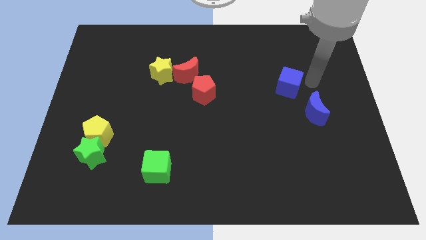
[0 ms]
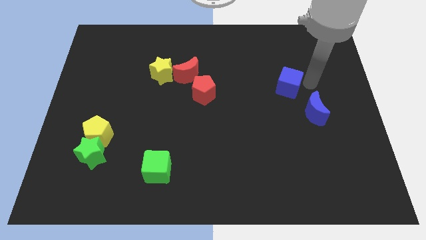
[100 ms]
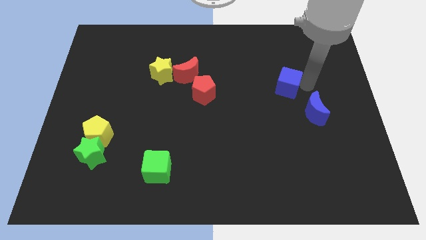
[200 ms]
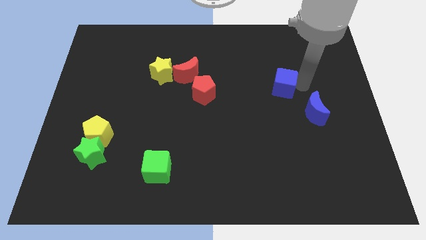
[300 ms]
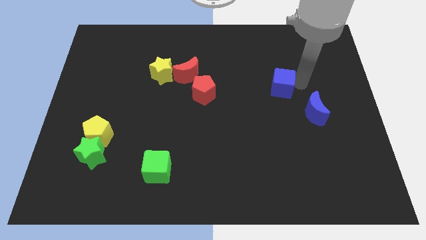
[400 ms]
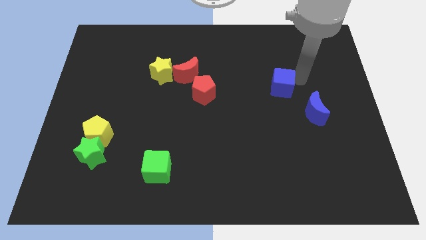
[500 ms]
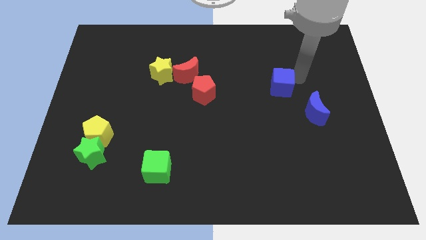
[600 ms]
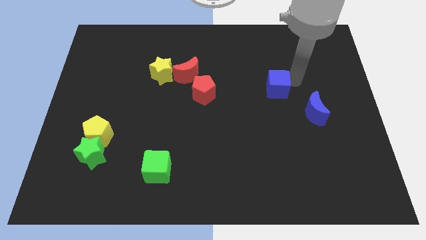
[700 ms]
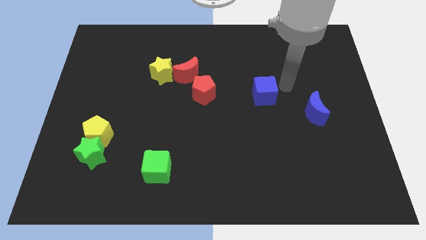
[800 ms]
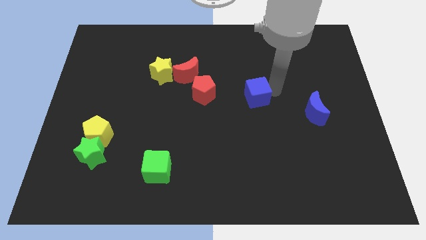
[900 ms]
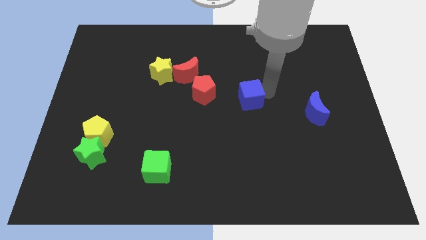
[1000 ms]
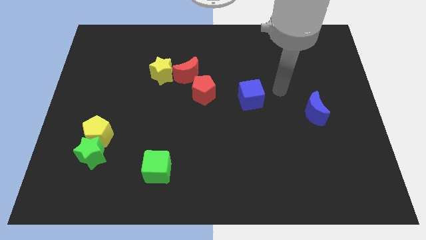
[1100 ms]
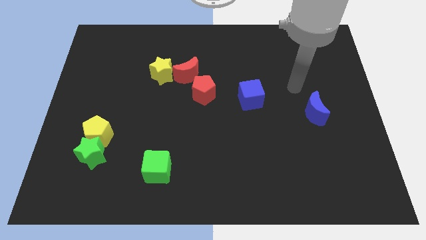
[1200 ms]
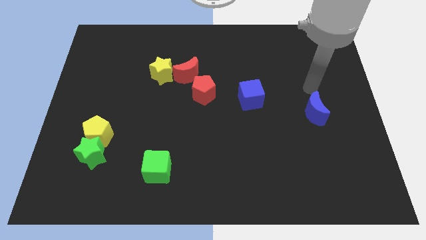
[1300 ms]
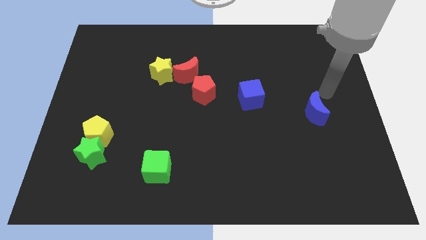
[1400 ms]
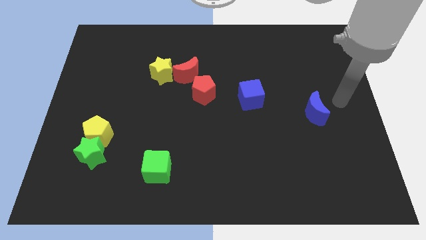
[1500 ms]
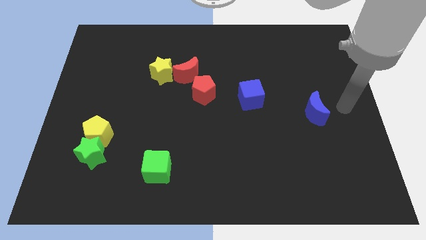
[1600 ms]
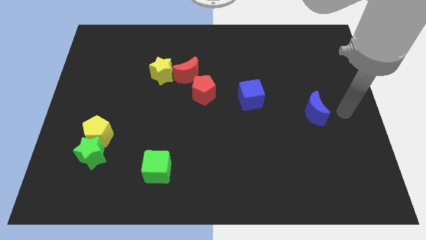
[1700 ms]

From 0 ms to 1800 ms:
put the blue cube parallel right to the red pentagon

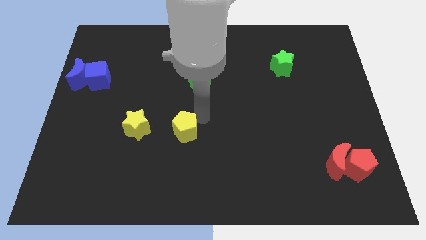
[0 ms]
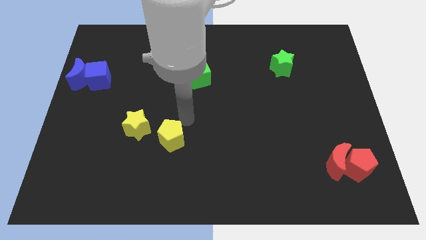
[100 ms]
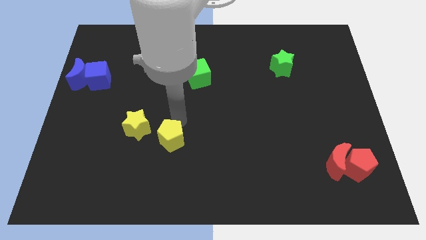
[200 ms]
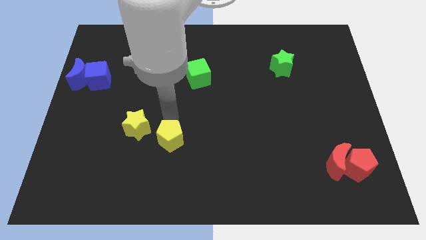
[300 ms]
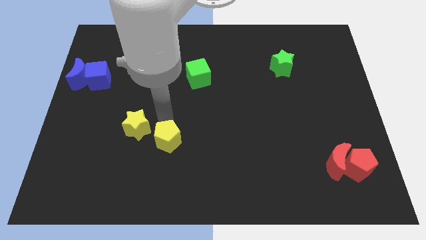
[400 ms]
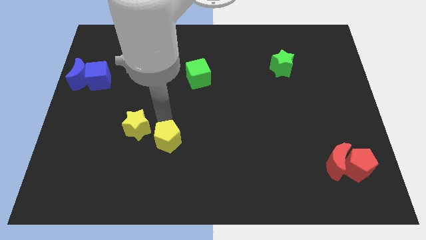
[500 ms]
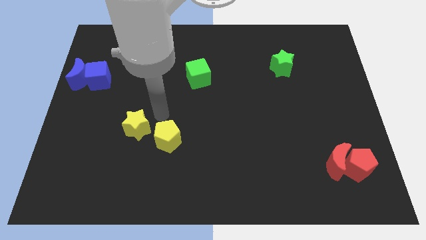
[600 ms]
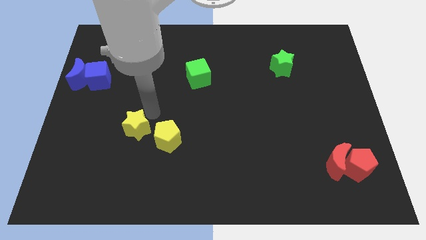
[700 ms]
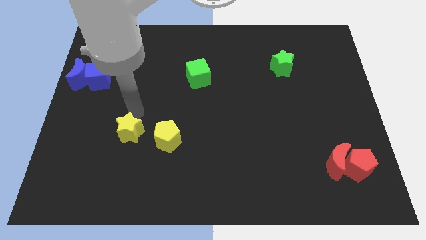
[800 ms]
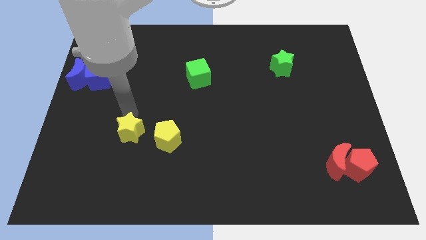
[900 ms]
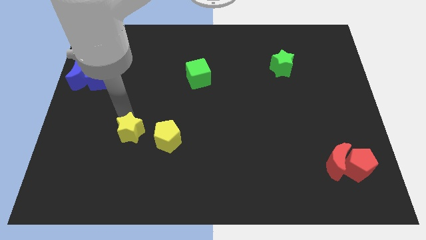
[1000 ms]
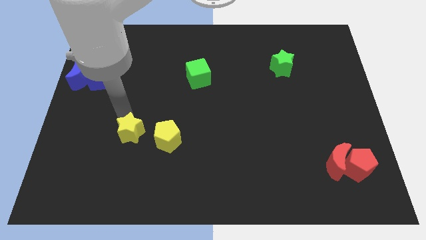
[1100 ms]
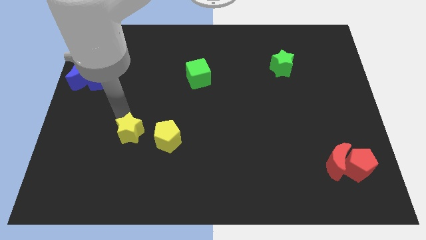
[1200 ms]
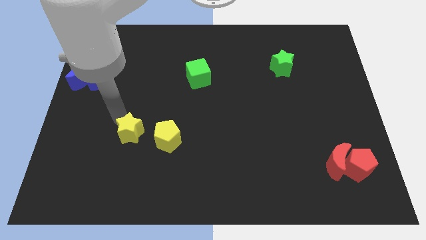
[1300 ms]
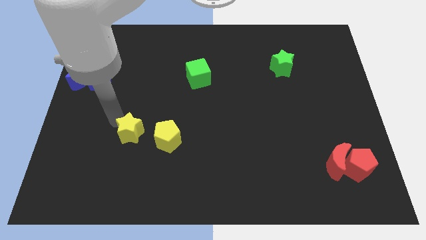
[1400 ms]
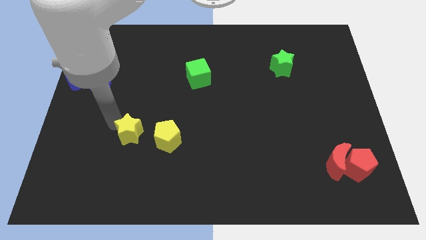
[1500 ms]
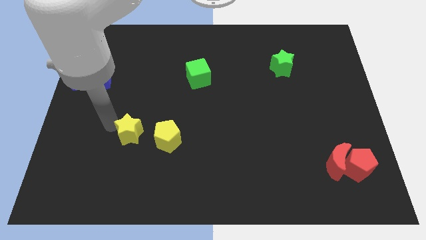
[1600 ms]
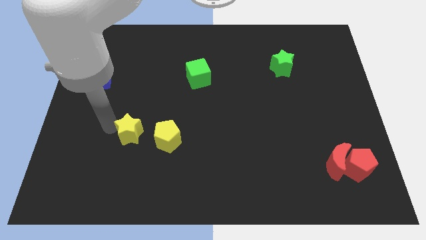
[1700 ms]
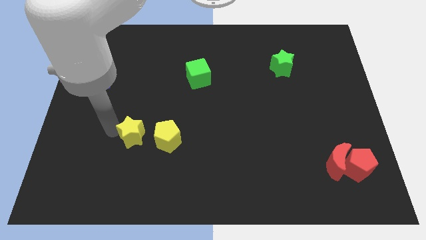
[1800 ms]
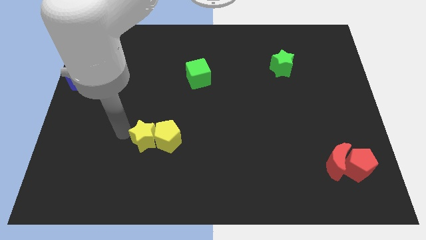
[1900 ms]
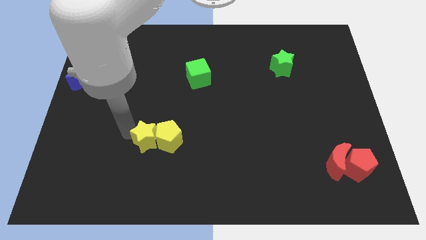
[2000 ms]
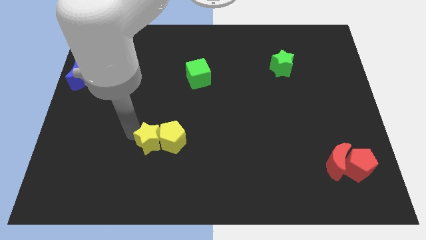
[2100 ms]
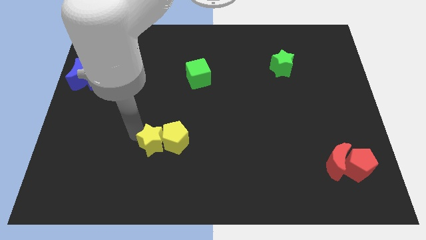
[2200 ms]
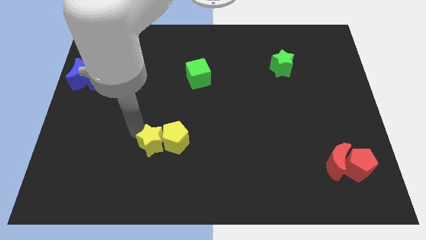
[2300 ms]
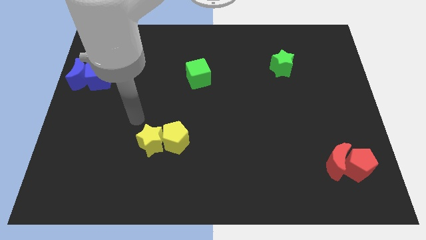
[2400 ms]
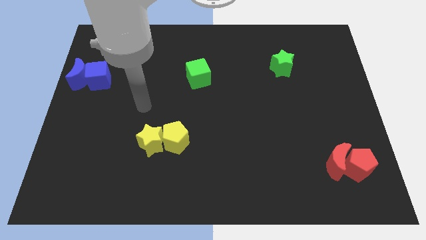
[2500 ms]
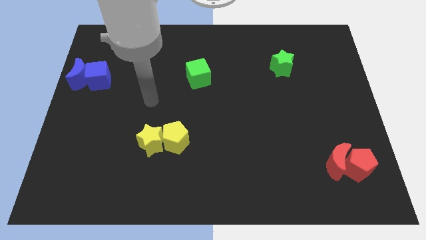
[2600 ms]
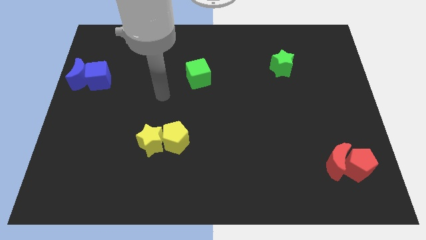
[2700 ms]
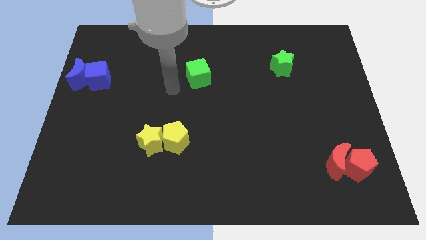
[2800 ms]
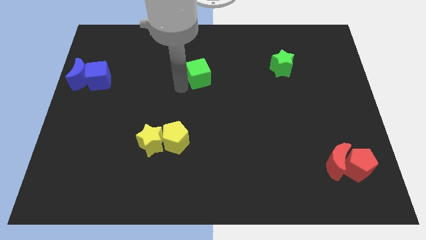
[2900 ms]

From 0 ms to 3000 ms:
move the yellow star to the left of the yellow pentagon

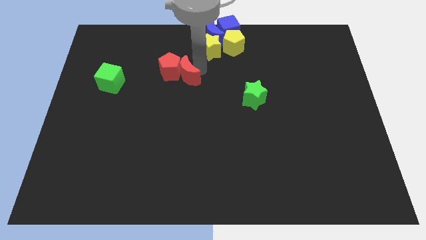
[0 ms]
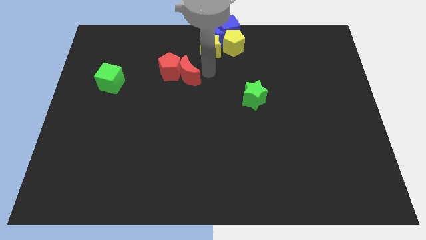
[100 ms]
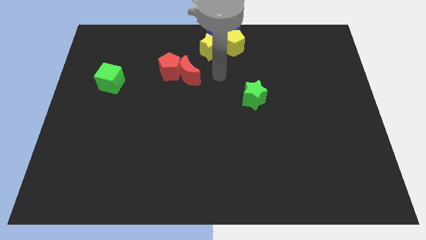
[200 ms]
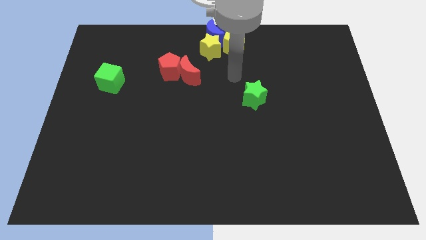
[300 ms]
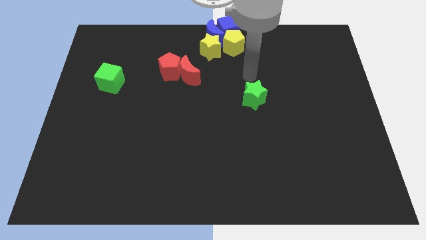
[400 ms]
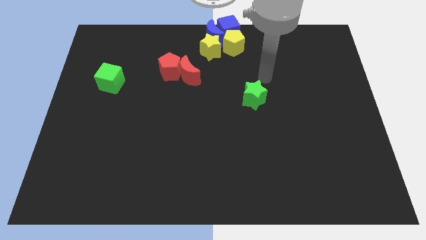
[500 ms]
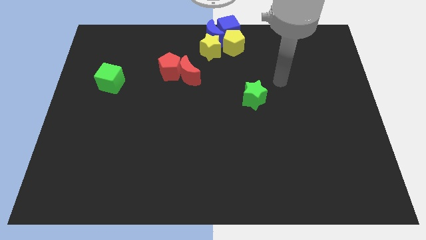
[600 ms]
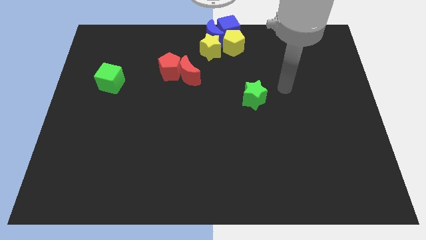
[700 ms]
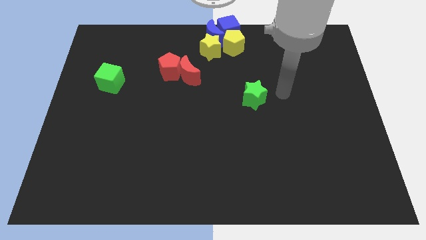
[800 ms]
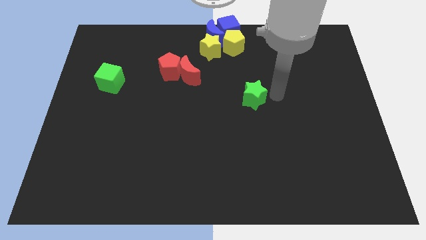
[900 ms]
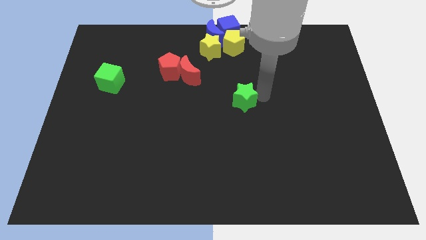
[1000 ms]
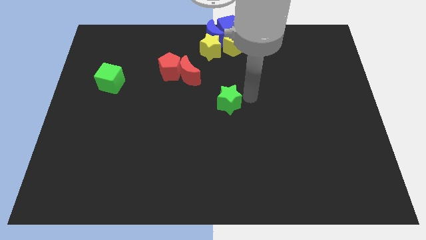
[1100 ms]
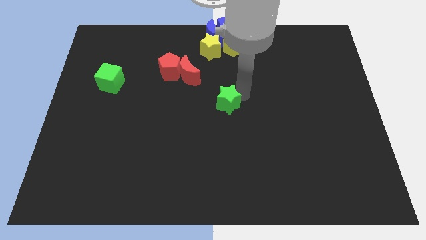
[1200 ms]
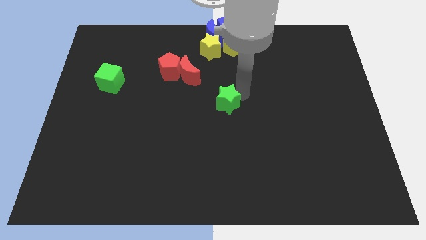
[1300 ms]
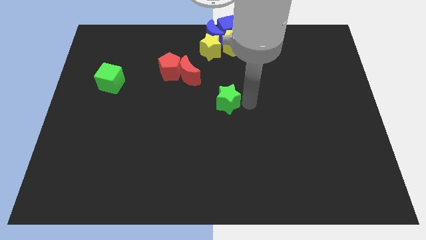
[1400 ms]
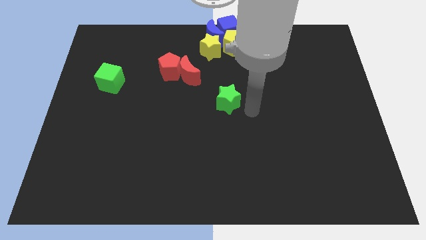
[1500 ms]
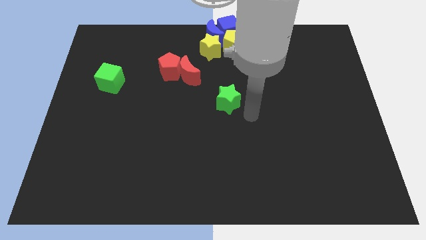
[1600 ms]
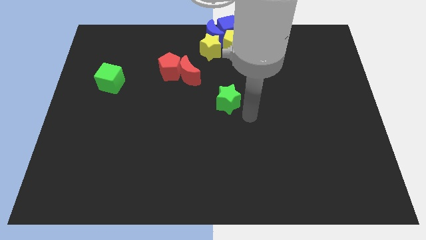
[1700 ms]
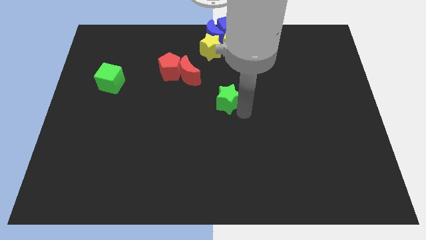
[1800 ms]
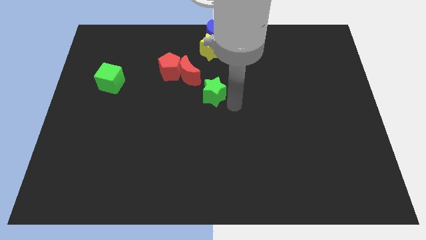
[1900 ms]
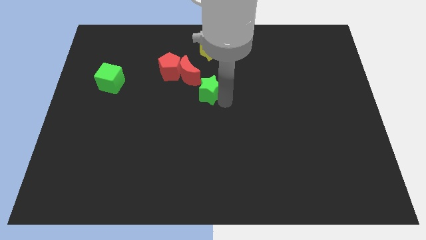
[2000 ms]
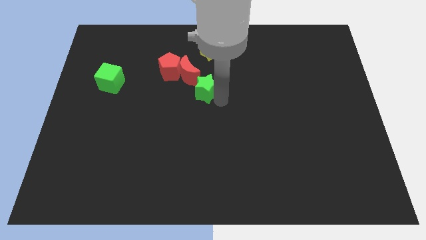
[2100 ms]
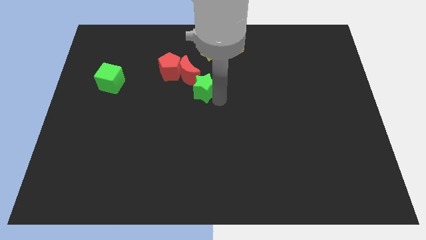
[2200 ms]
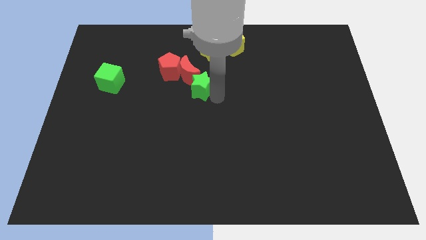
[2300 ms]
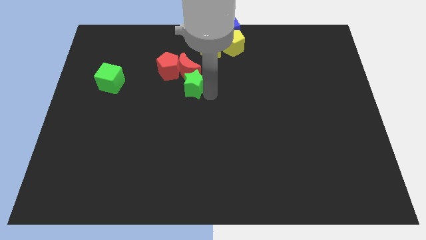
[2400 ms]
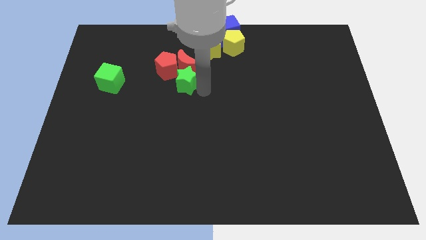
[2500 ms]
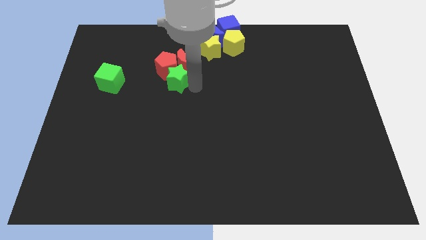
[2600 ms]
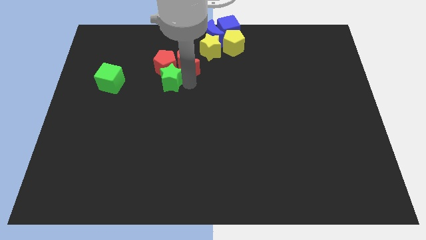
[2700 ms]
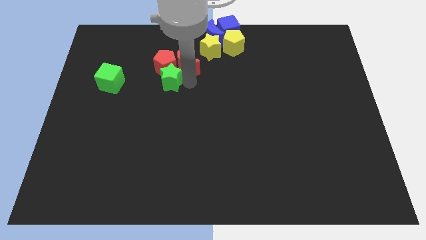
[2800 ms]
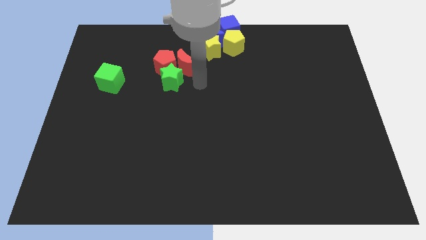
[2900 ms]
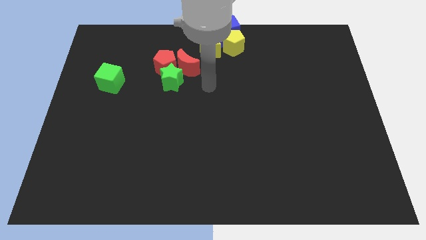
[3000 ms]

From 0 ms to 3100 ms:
move the green star below to the red pentagon

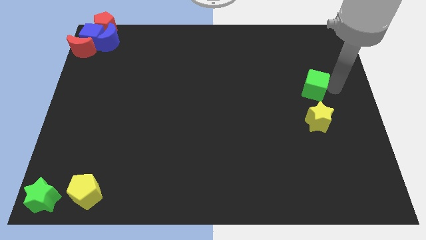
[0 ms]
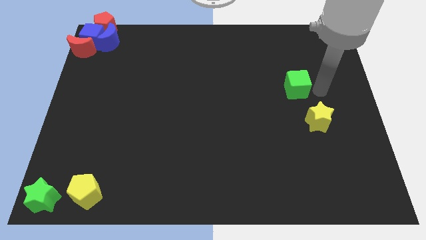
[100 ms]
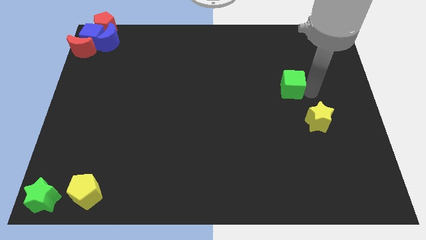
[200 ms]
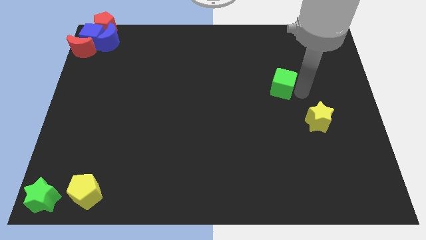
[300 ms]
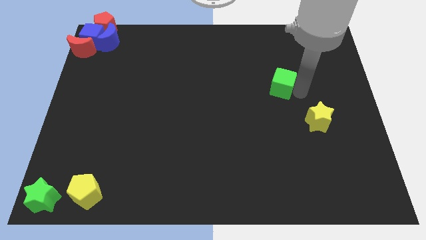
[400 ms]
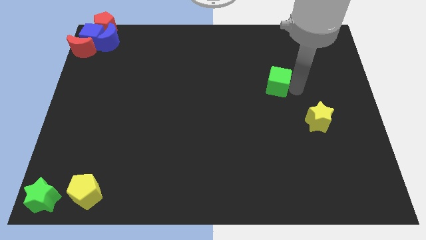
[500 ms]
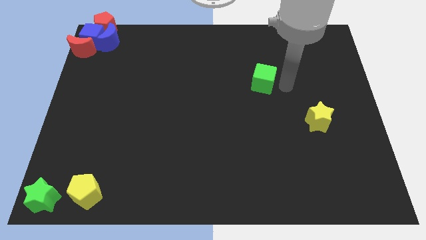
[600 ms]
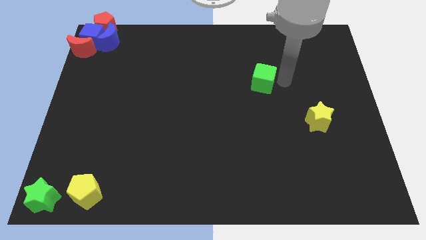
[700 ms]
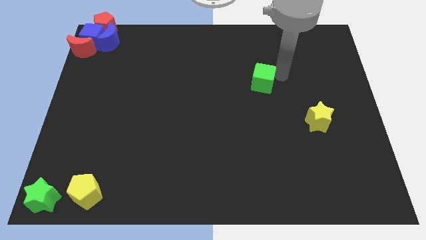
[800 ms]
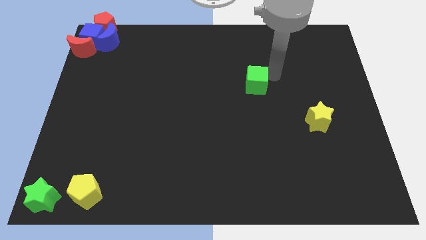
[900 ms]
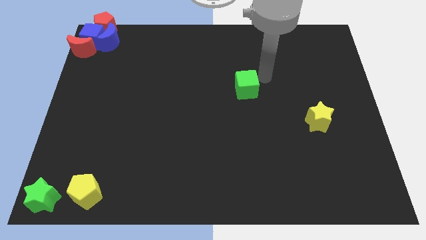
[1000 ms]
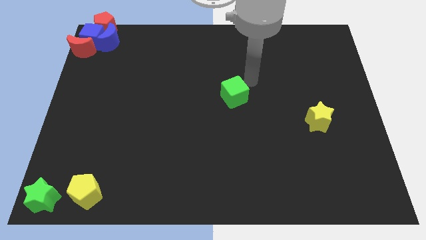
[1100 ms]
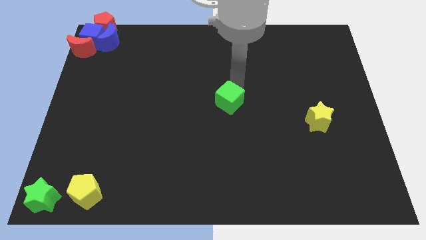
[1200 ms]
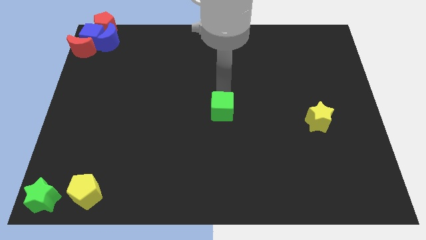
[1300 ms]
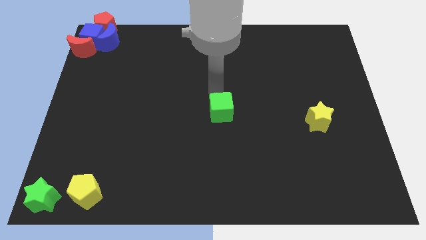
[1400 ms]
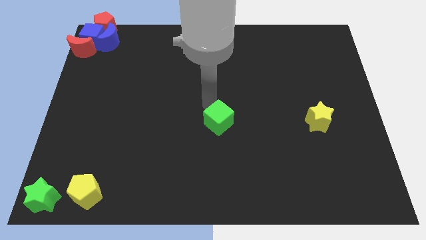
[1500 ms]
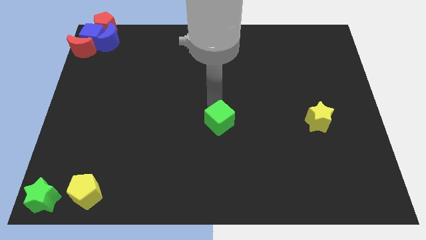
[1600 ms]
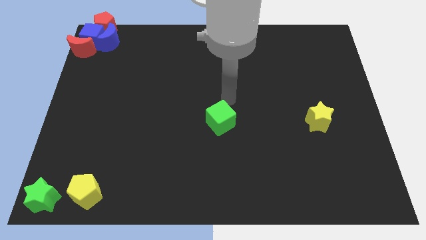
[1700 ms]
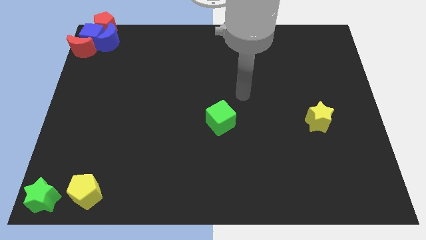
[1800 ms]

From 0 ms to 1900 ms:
push the green cube to the center of the board
